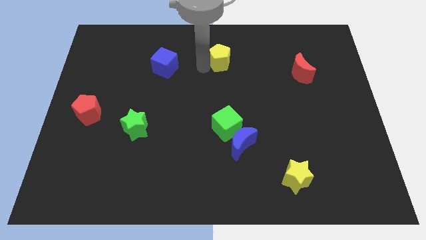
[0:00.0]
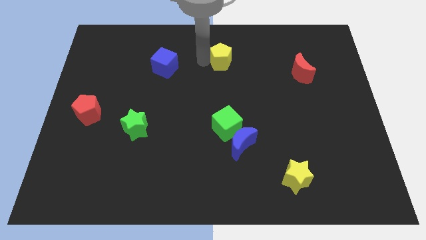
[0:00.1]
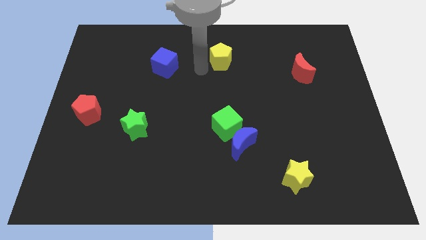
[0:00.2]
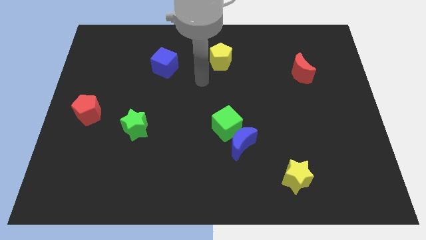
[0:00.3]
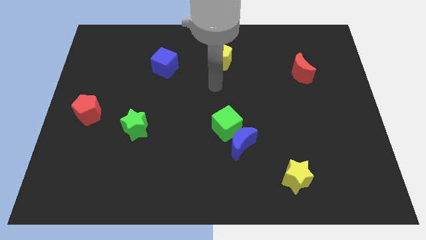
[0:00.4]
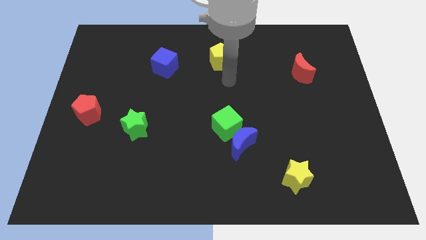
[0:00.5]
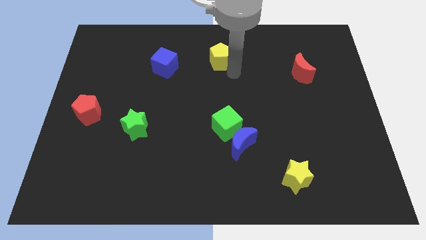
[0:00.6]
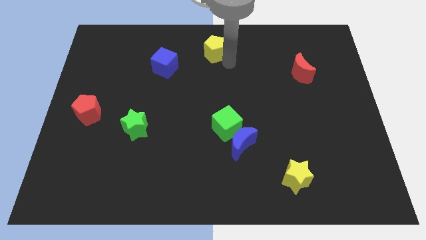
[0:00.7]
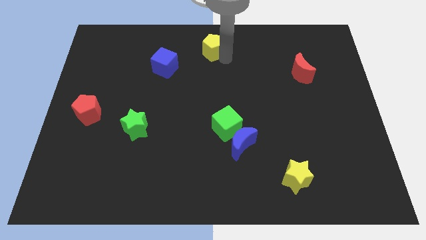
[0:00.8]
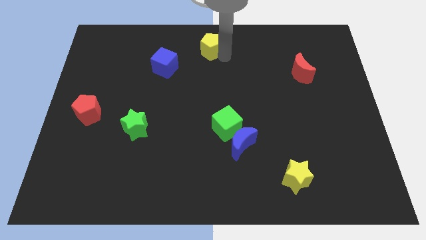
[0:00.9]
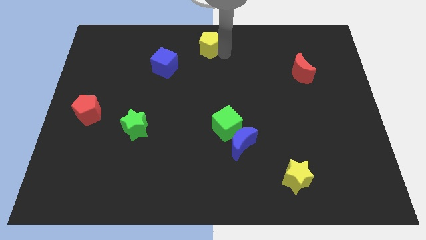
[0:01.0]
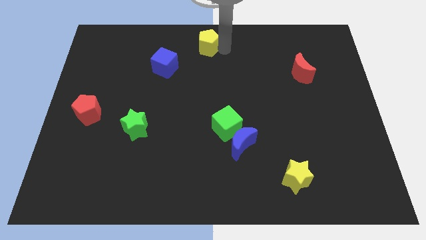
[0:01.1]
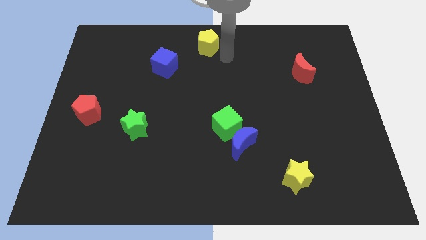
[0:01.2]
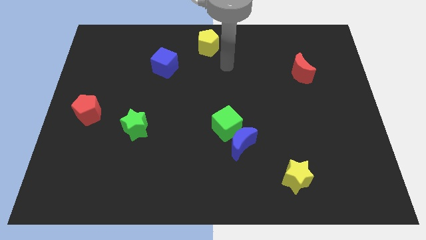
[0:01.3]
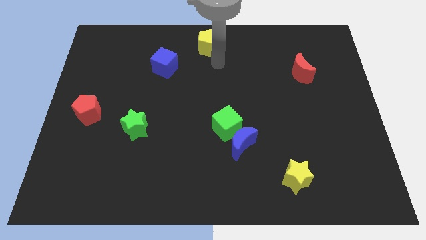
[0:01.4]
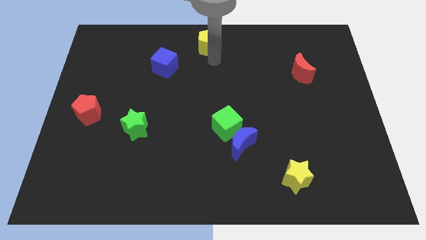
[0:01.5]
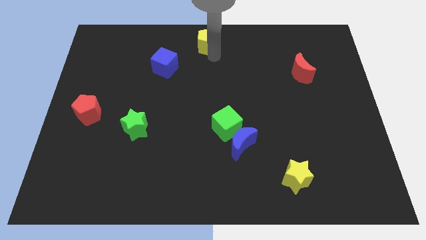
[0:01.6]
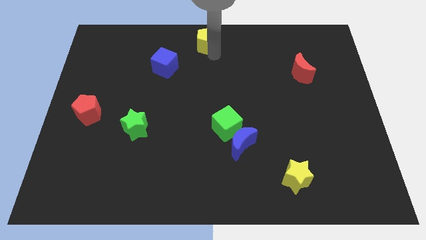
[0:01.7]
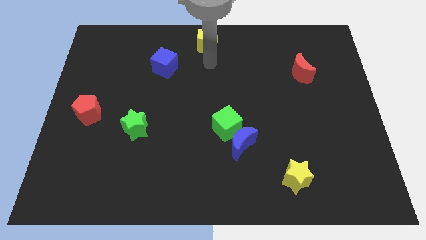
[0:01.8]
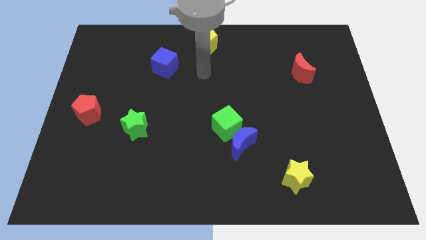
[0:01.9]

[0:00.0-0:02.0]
place the yellow pentagon towards the top center of the board

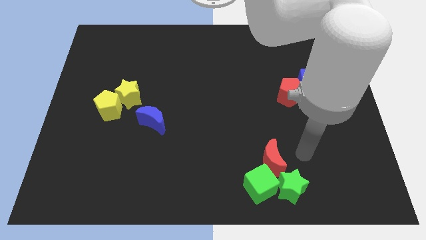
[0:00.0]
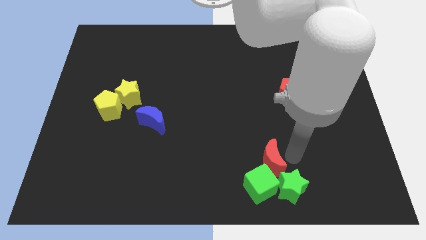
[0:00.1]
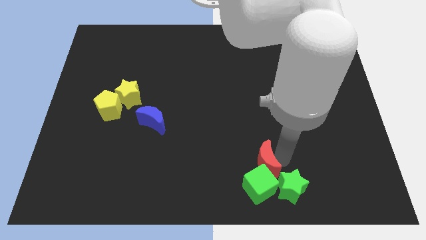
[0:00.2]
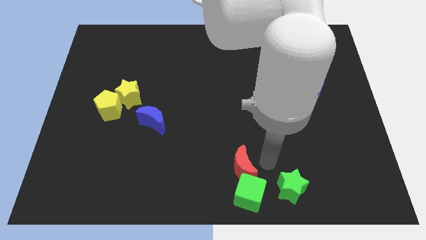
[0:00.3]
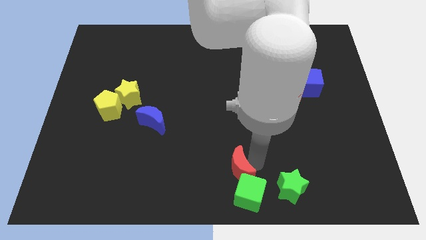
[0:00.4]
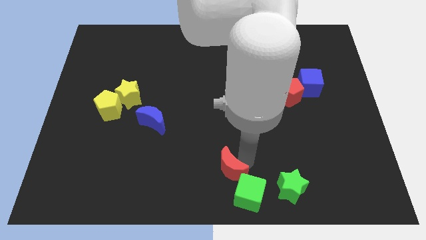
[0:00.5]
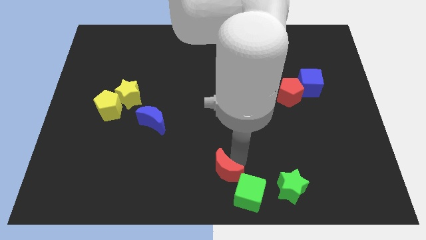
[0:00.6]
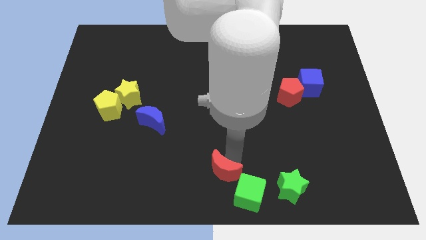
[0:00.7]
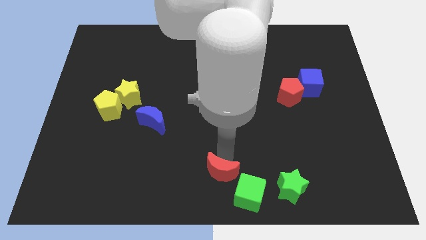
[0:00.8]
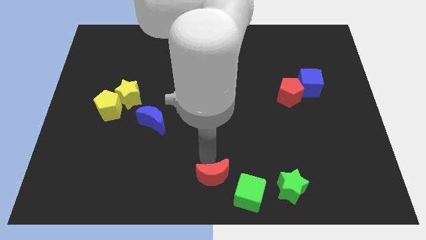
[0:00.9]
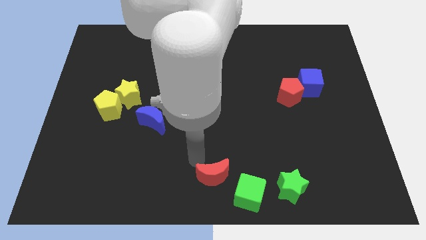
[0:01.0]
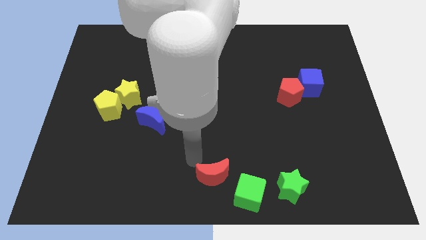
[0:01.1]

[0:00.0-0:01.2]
move the red moon towards left

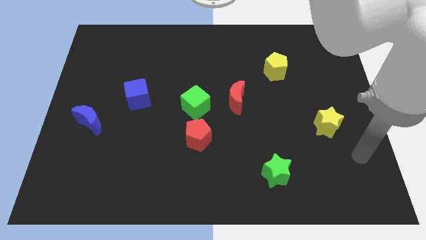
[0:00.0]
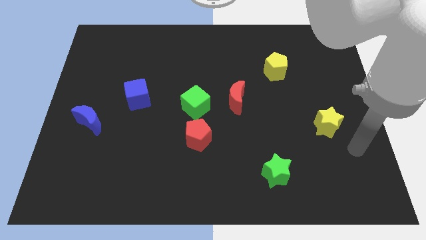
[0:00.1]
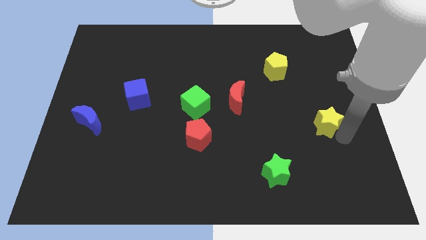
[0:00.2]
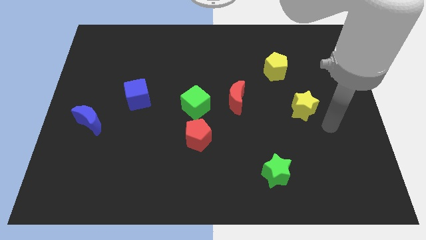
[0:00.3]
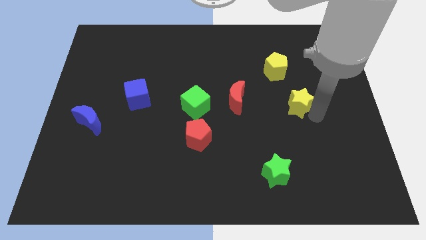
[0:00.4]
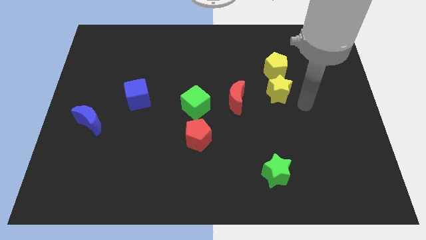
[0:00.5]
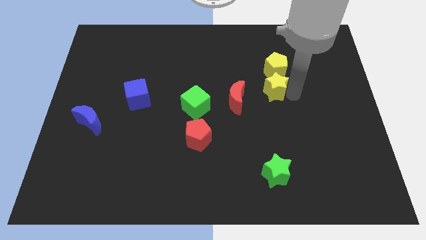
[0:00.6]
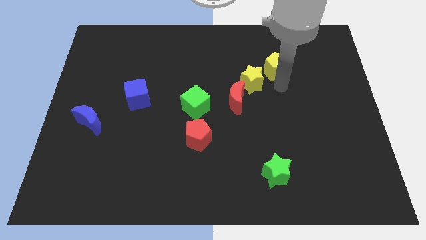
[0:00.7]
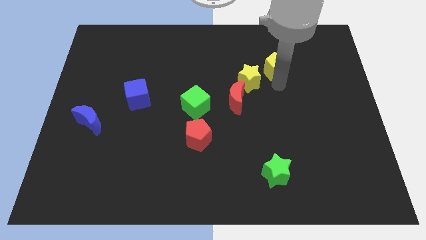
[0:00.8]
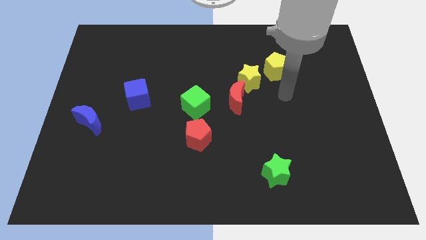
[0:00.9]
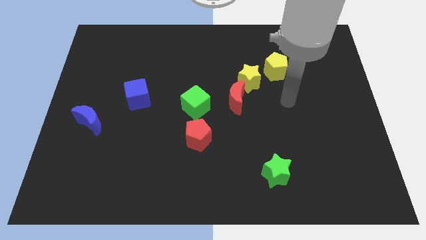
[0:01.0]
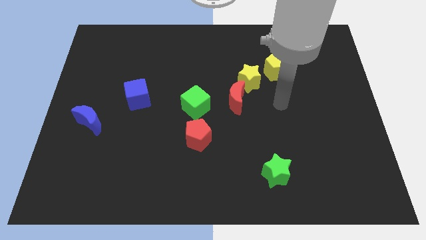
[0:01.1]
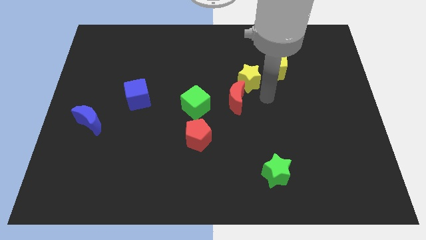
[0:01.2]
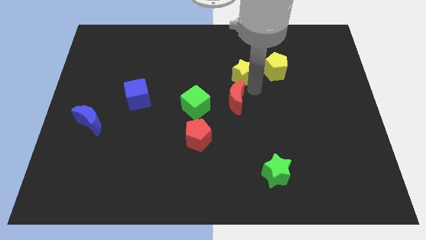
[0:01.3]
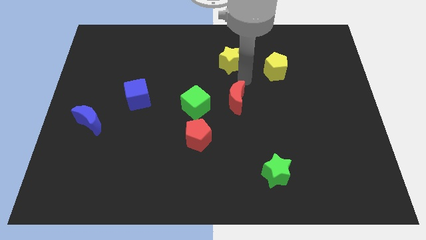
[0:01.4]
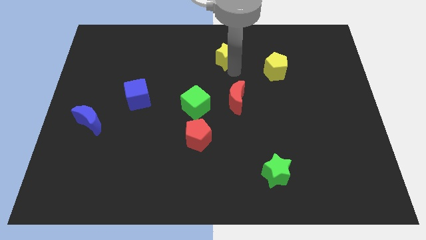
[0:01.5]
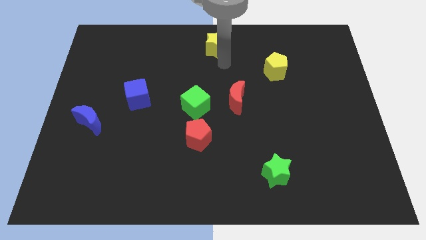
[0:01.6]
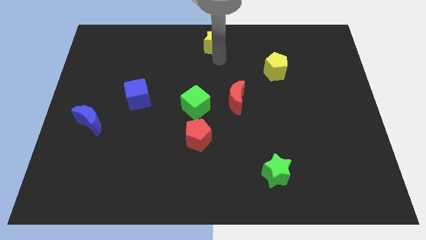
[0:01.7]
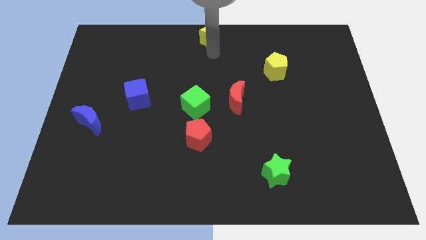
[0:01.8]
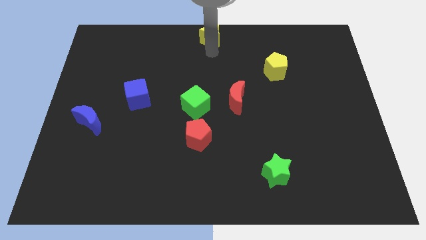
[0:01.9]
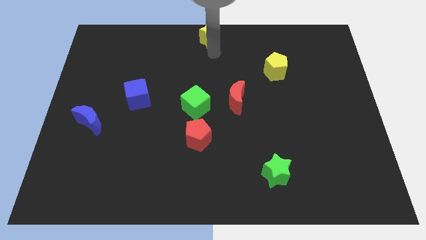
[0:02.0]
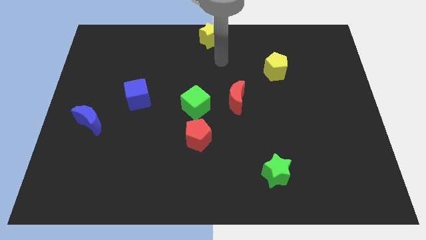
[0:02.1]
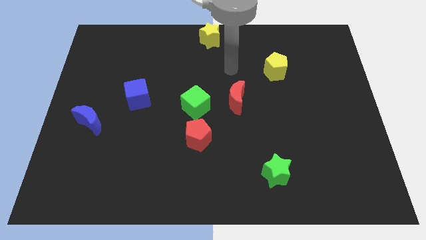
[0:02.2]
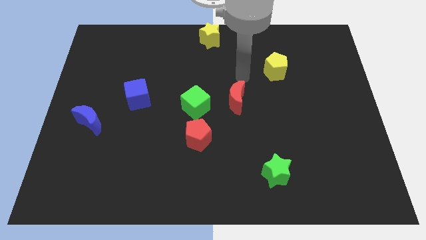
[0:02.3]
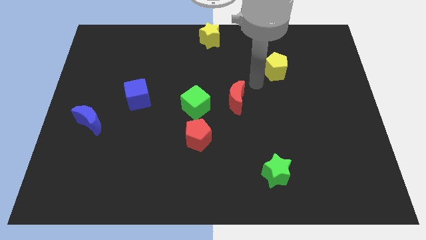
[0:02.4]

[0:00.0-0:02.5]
push the yellow star towards the top center of the board

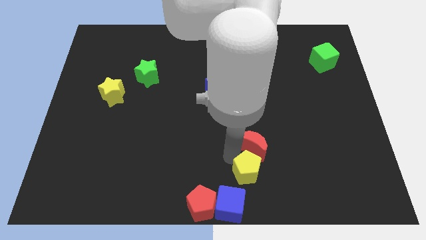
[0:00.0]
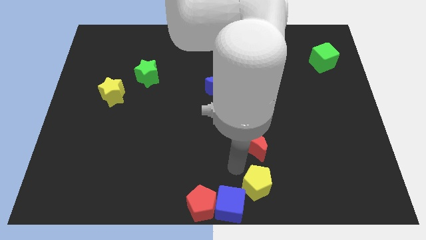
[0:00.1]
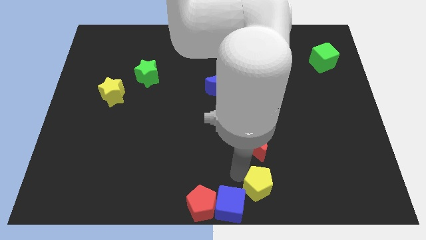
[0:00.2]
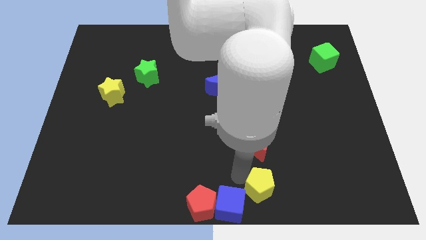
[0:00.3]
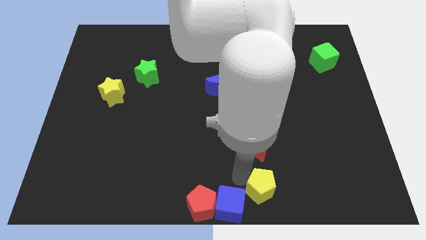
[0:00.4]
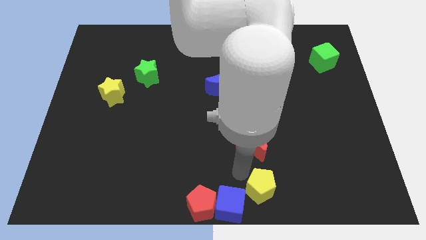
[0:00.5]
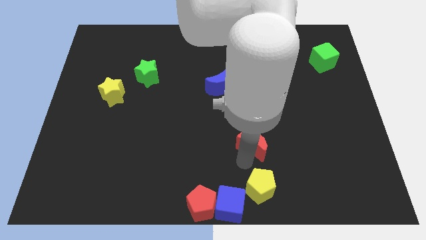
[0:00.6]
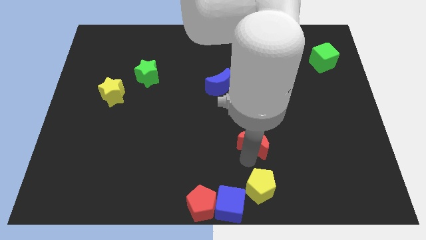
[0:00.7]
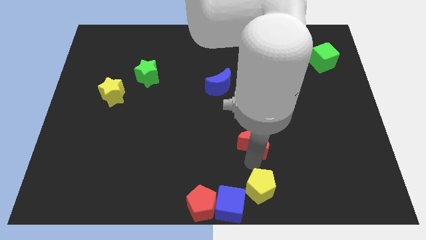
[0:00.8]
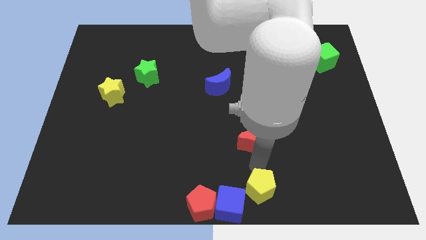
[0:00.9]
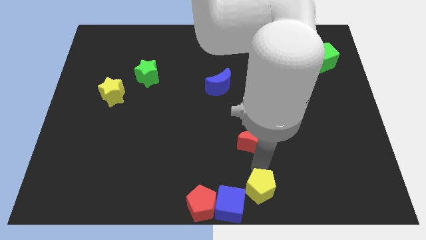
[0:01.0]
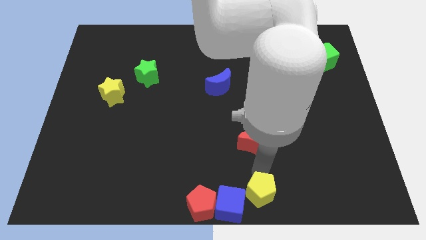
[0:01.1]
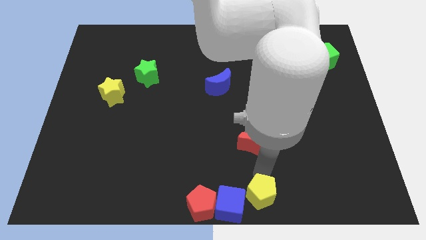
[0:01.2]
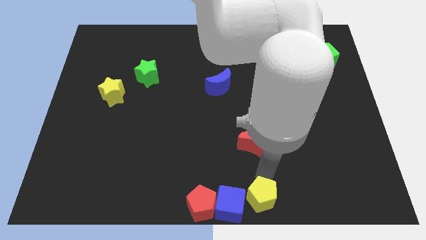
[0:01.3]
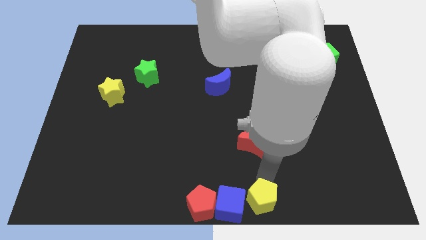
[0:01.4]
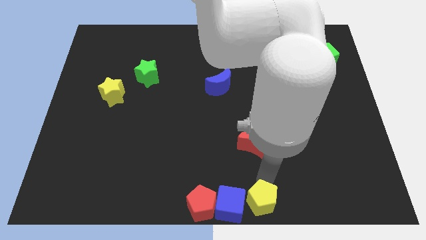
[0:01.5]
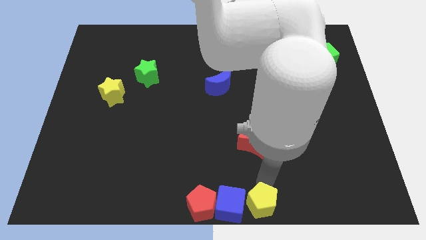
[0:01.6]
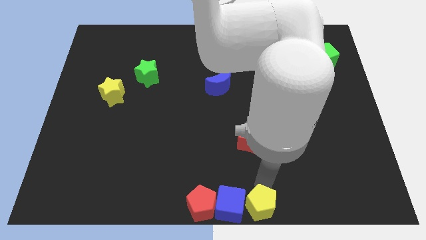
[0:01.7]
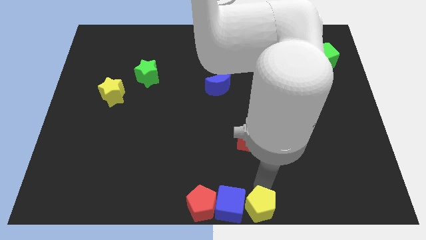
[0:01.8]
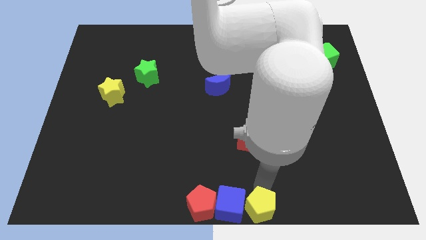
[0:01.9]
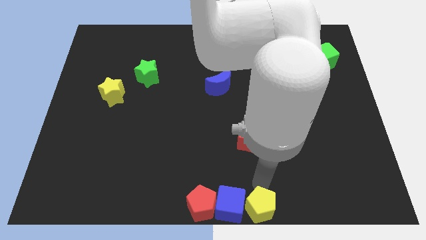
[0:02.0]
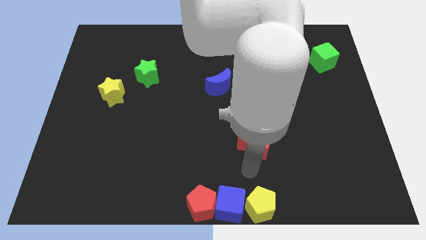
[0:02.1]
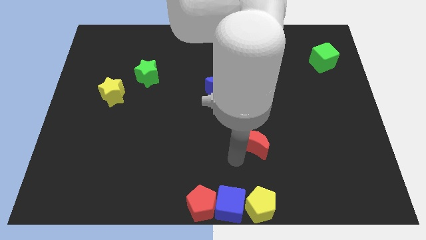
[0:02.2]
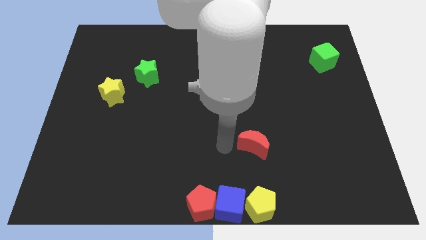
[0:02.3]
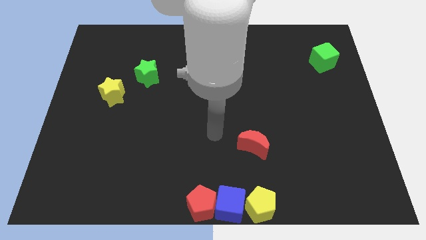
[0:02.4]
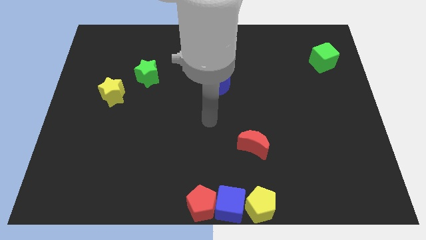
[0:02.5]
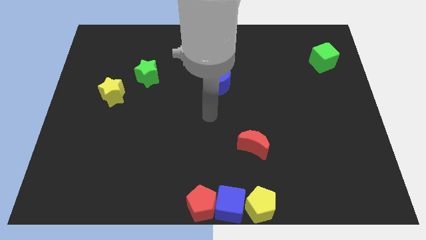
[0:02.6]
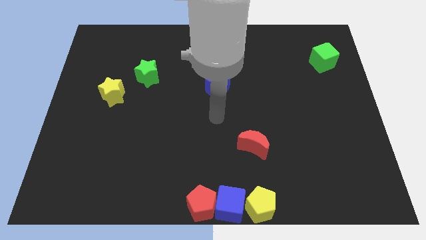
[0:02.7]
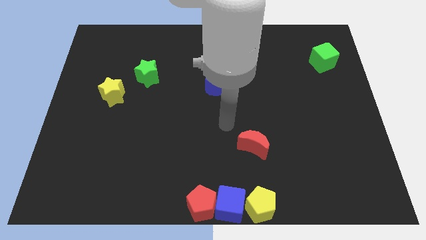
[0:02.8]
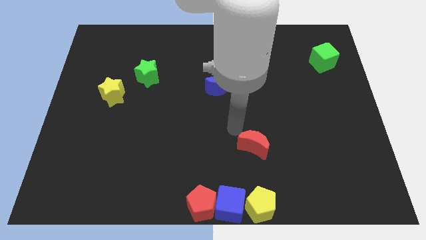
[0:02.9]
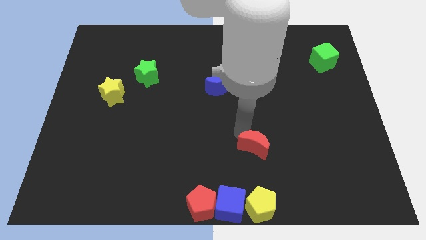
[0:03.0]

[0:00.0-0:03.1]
put the yellow pentagon to the right of the blue cube

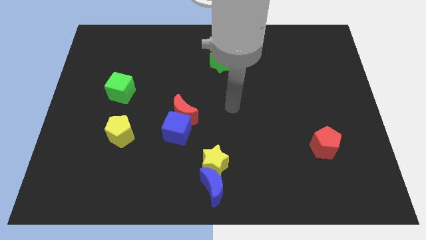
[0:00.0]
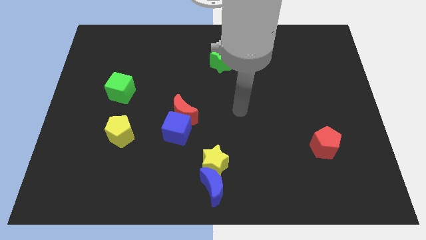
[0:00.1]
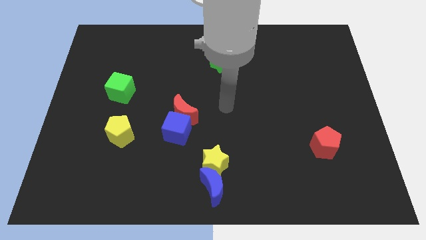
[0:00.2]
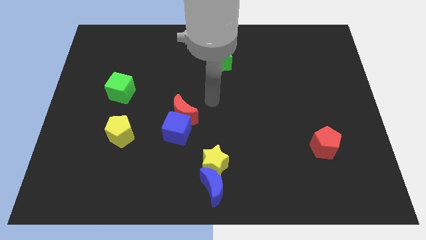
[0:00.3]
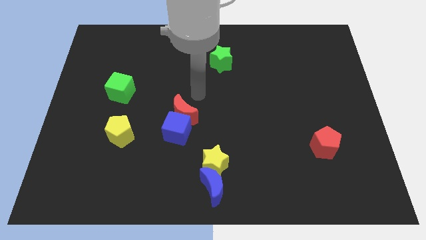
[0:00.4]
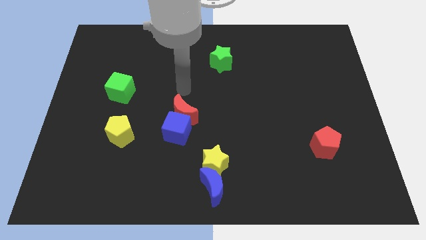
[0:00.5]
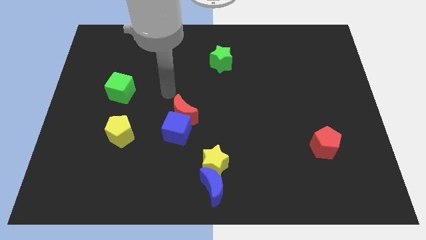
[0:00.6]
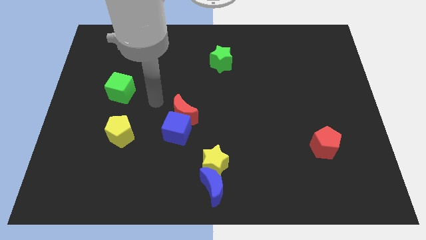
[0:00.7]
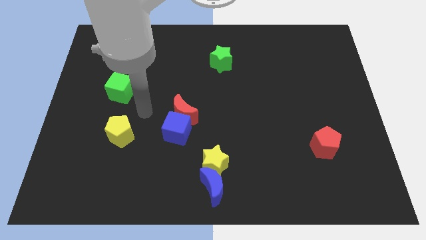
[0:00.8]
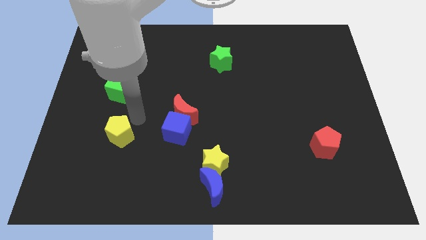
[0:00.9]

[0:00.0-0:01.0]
move arm close to green cube
